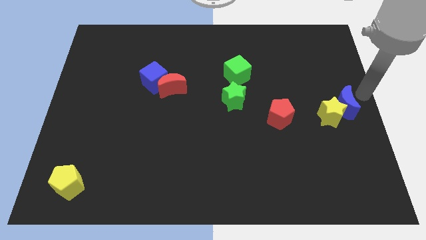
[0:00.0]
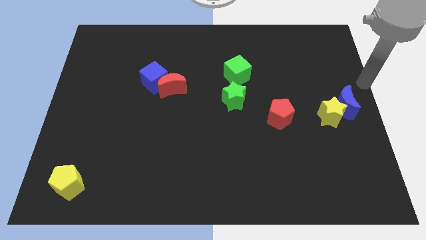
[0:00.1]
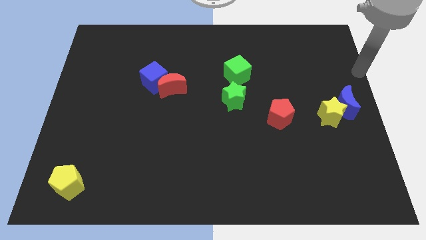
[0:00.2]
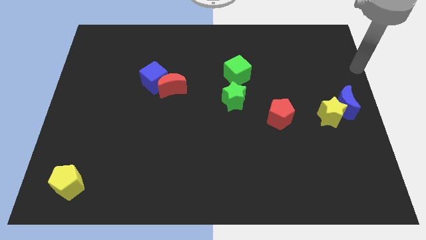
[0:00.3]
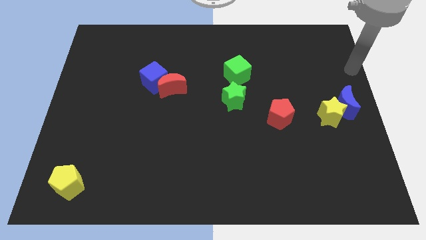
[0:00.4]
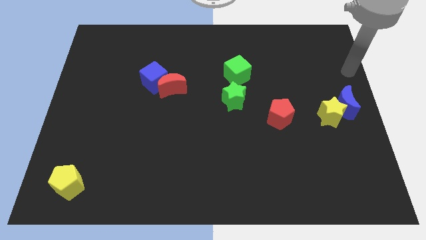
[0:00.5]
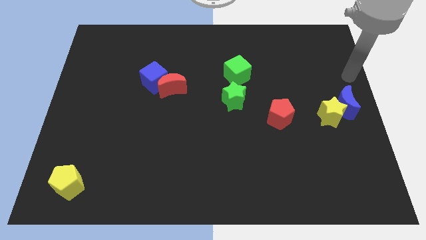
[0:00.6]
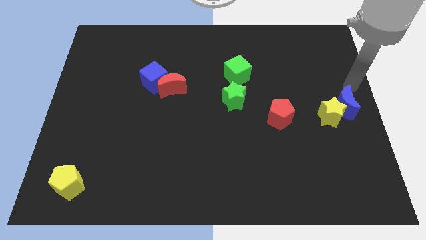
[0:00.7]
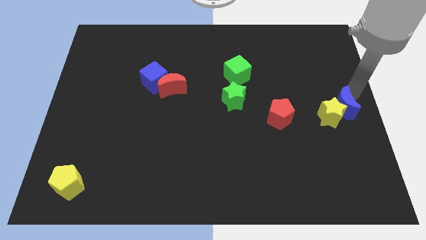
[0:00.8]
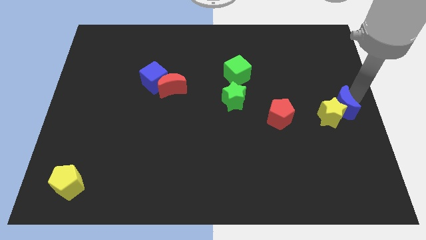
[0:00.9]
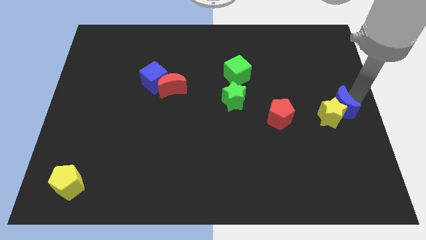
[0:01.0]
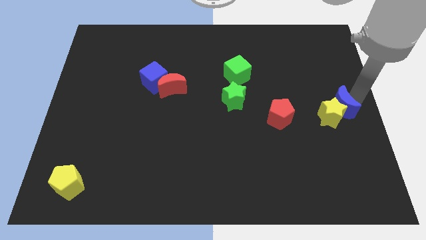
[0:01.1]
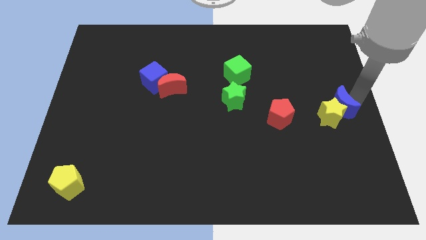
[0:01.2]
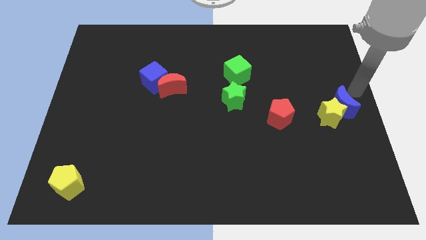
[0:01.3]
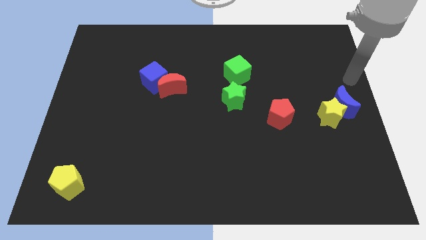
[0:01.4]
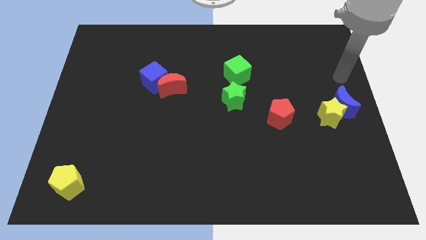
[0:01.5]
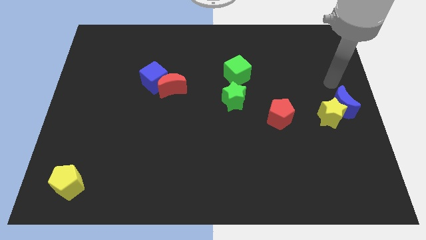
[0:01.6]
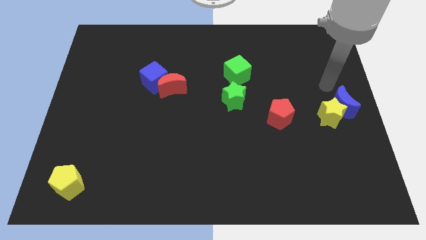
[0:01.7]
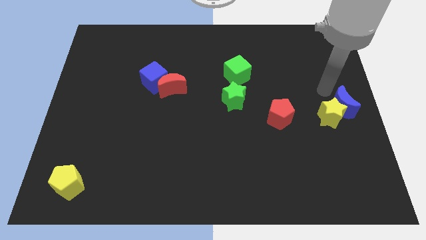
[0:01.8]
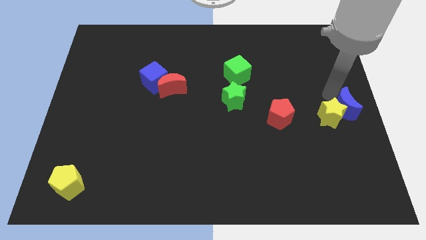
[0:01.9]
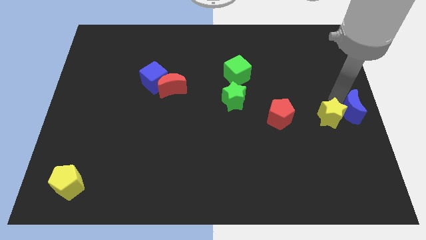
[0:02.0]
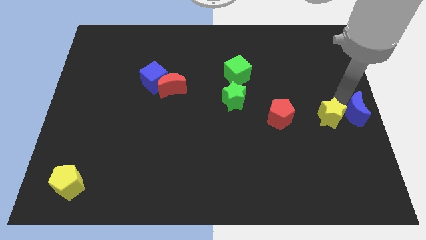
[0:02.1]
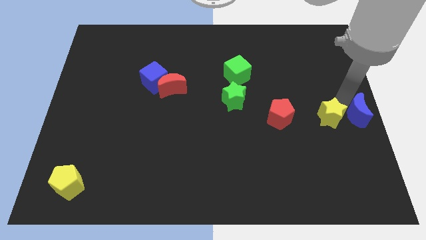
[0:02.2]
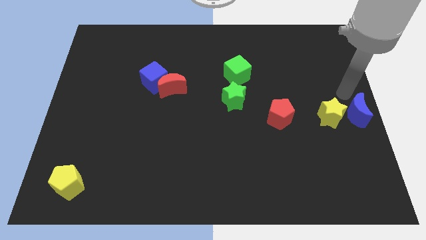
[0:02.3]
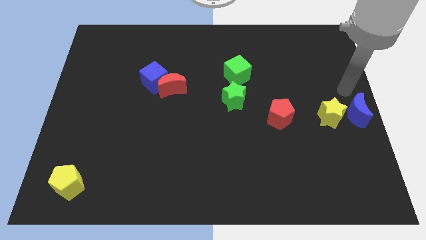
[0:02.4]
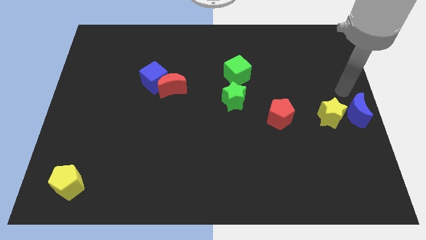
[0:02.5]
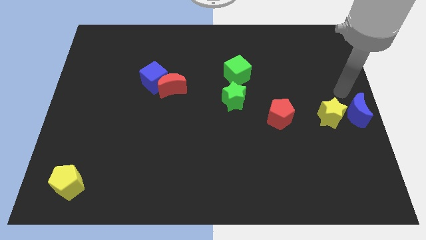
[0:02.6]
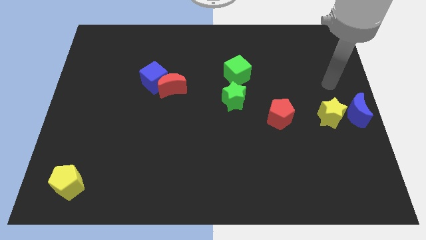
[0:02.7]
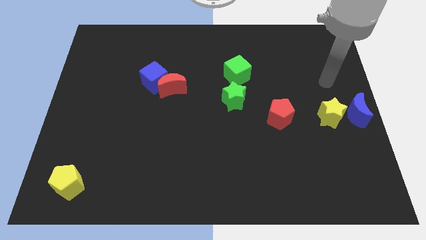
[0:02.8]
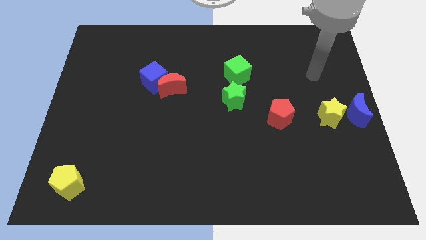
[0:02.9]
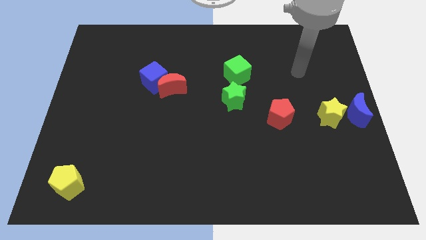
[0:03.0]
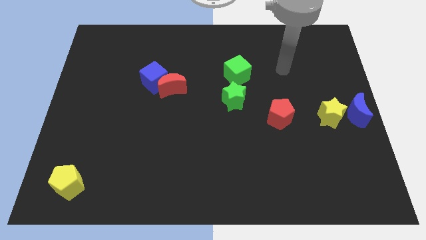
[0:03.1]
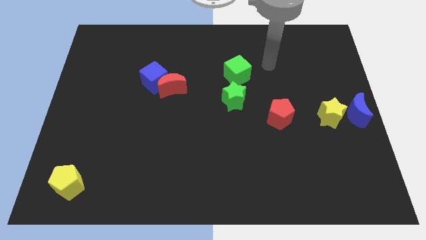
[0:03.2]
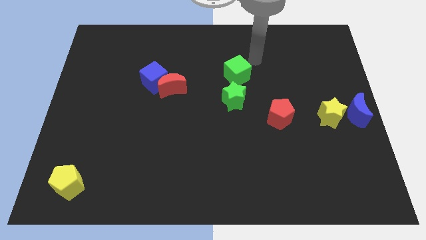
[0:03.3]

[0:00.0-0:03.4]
push the blue moon to the right center of the board

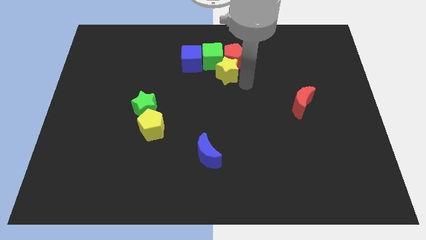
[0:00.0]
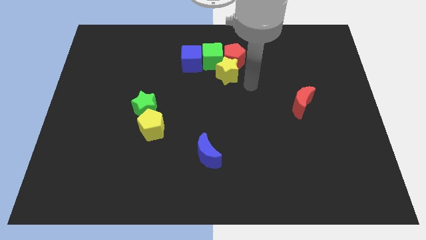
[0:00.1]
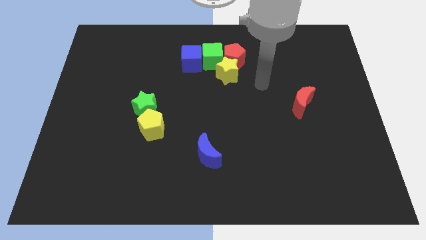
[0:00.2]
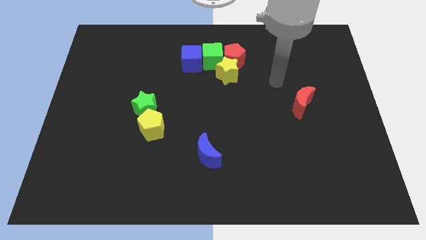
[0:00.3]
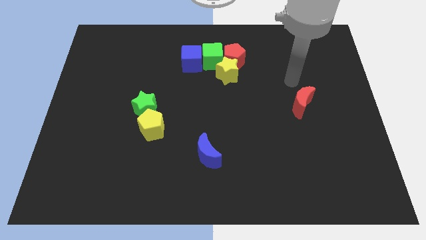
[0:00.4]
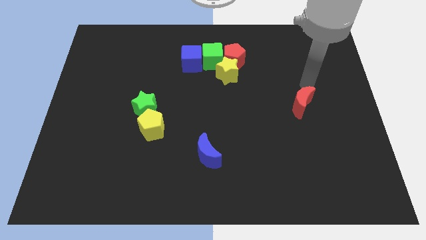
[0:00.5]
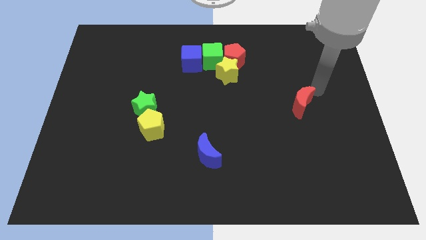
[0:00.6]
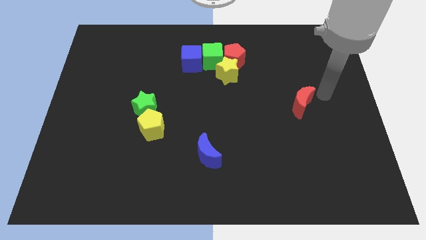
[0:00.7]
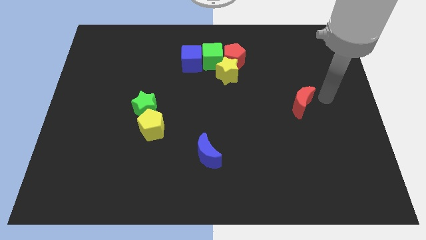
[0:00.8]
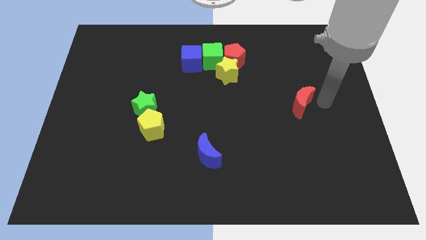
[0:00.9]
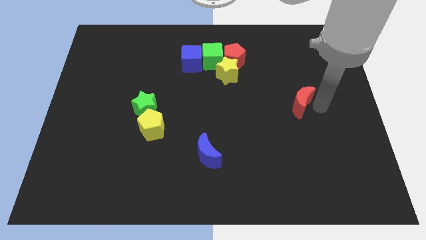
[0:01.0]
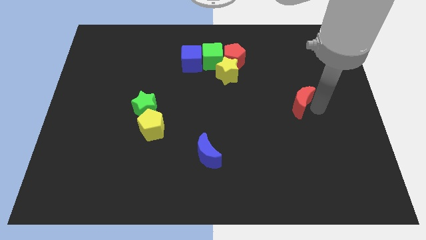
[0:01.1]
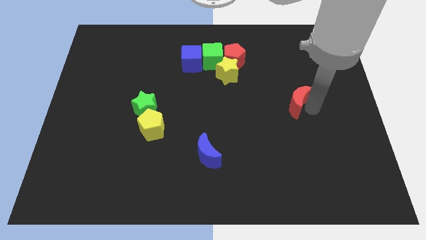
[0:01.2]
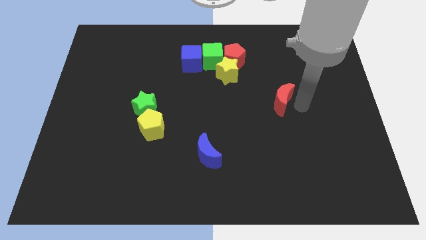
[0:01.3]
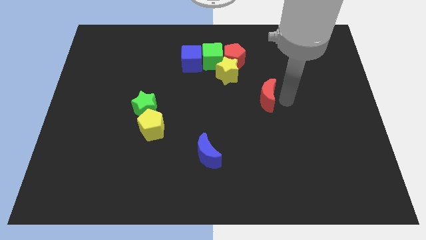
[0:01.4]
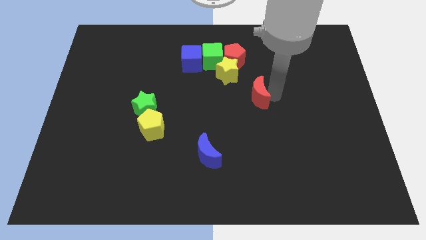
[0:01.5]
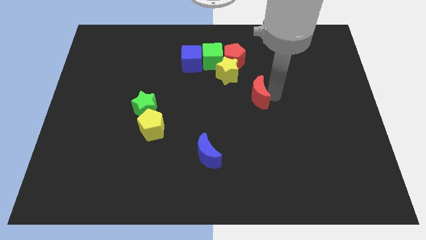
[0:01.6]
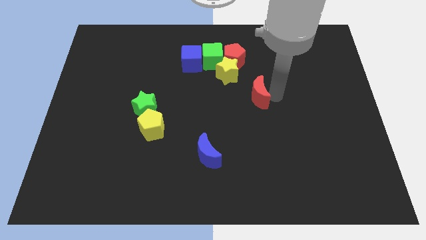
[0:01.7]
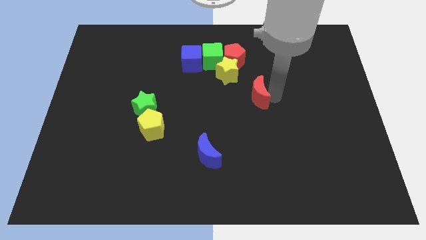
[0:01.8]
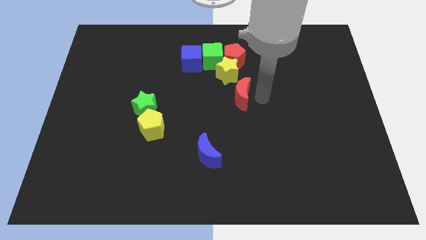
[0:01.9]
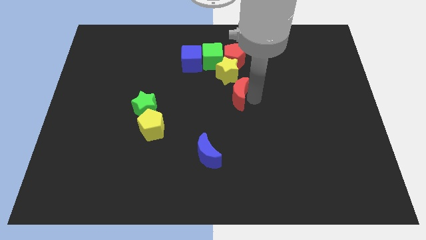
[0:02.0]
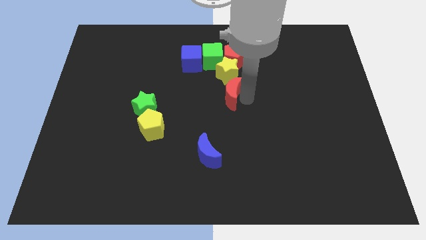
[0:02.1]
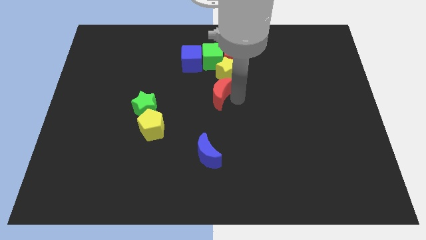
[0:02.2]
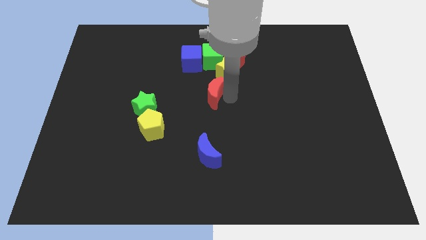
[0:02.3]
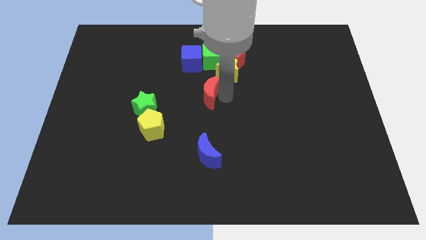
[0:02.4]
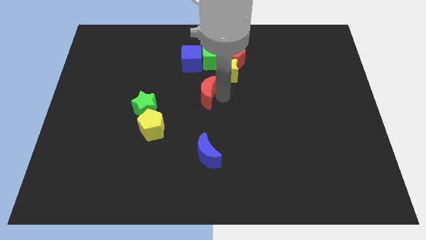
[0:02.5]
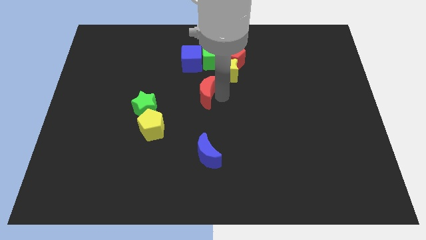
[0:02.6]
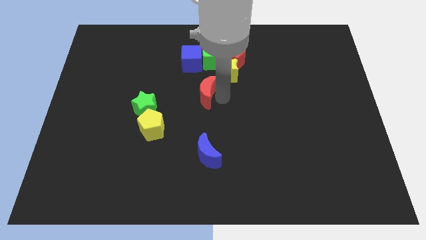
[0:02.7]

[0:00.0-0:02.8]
move red crescent to the center

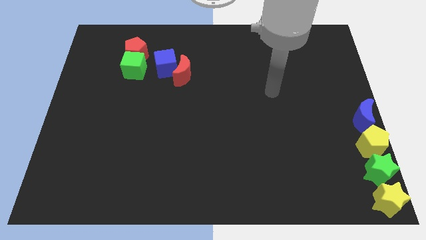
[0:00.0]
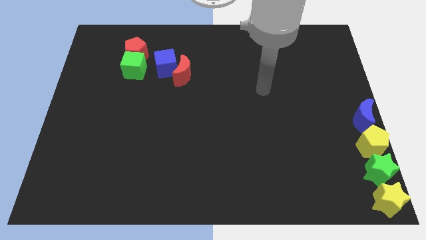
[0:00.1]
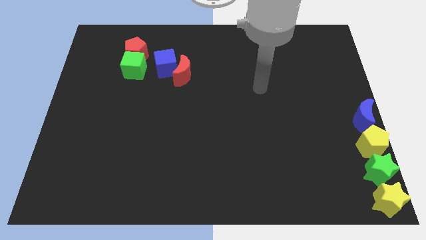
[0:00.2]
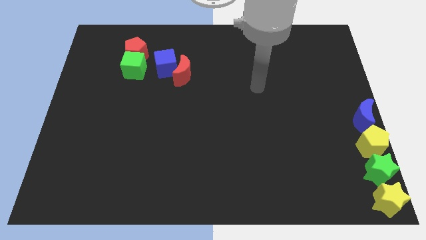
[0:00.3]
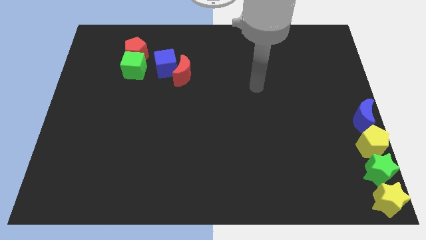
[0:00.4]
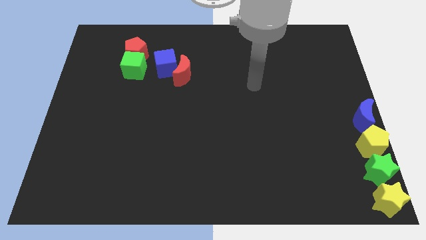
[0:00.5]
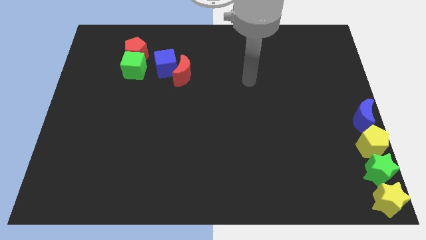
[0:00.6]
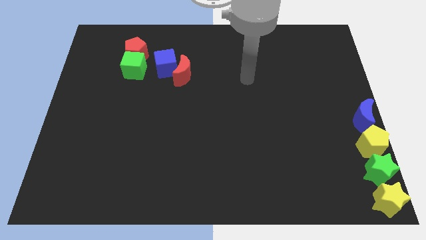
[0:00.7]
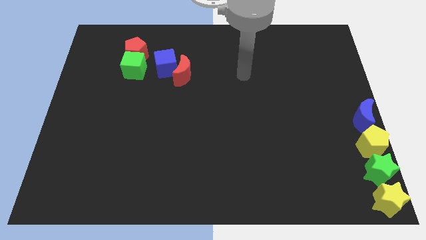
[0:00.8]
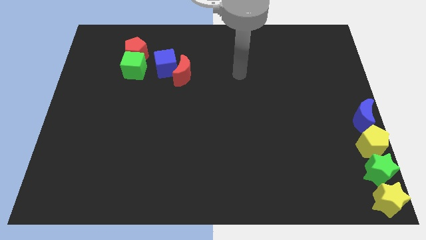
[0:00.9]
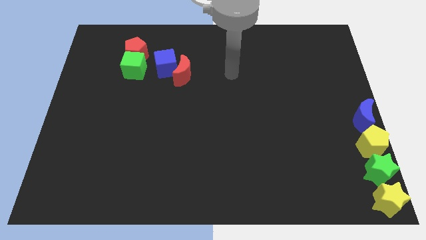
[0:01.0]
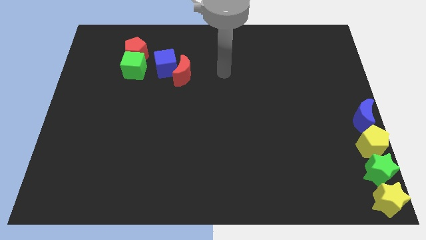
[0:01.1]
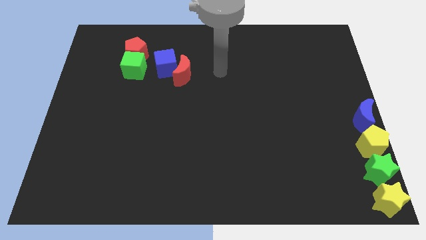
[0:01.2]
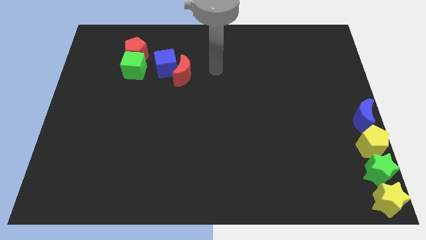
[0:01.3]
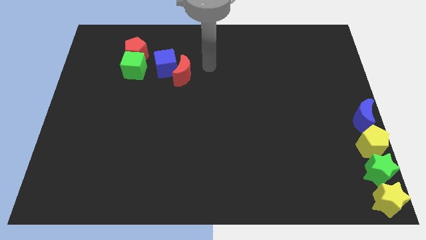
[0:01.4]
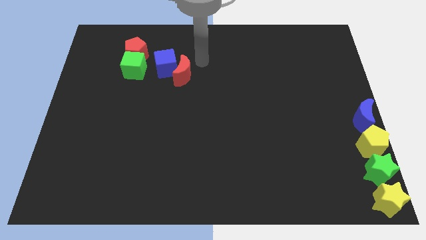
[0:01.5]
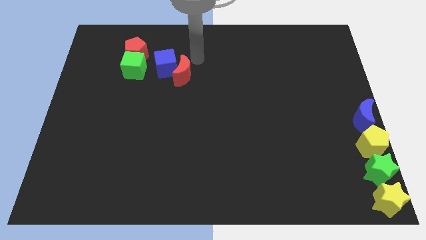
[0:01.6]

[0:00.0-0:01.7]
move your arm right to the red crescent

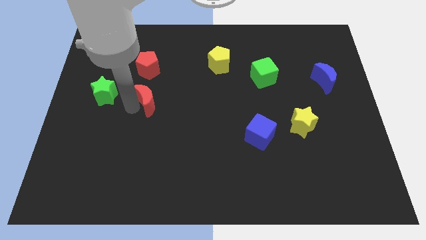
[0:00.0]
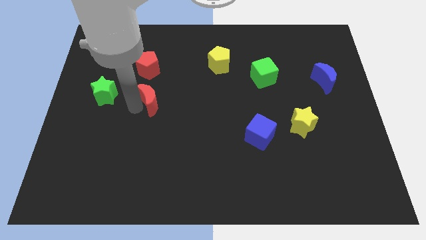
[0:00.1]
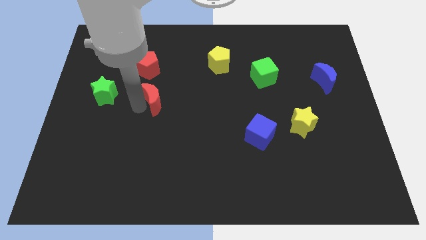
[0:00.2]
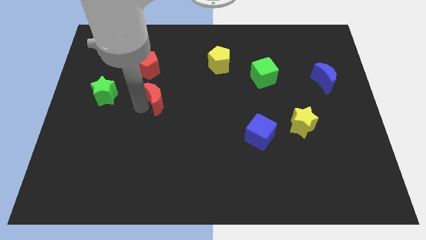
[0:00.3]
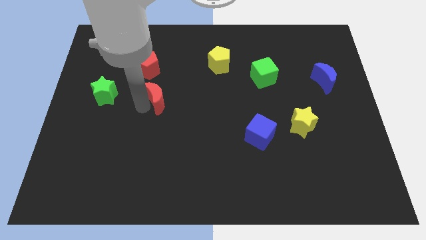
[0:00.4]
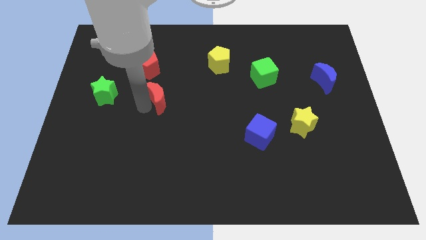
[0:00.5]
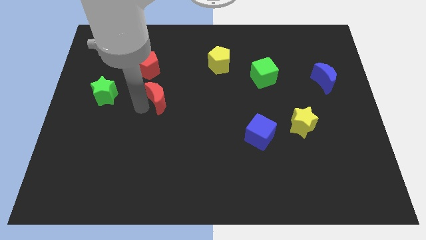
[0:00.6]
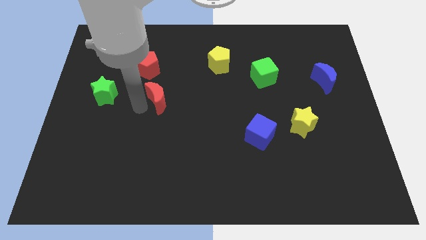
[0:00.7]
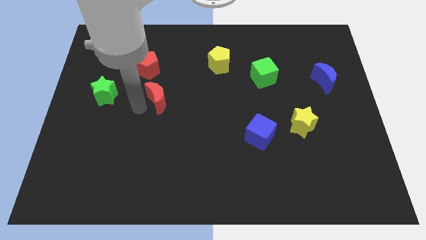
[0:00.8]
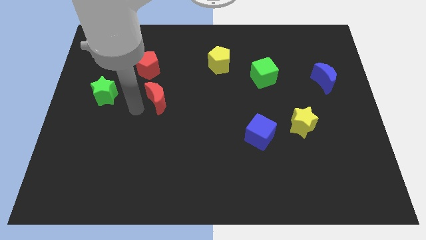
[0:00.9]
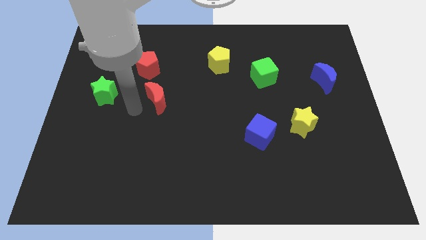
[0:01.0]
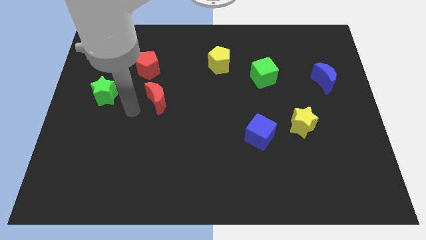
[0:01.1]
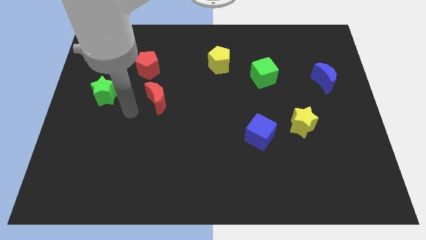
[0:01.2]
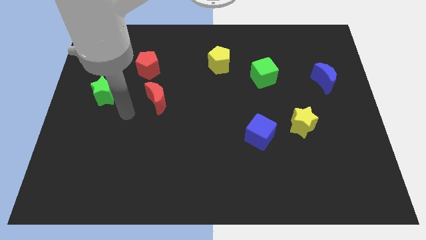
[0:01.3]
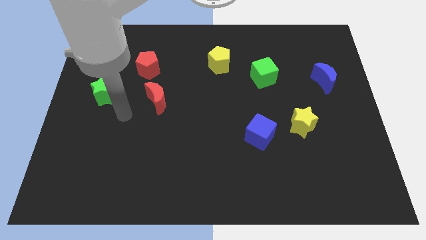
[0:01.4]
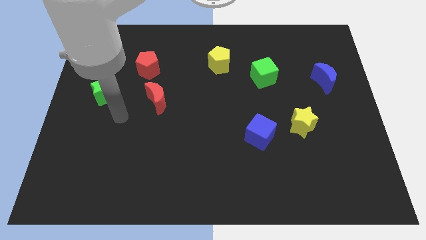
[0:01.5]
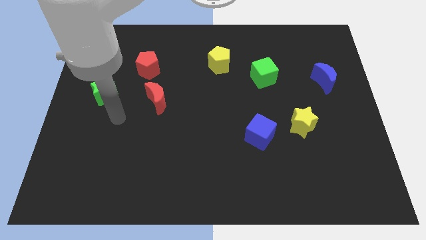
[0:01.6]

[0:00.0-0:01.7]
move red crescent to the bottom of red pentagon
